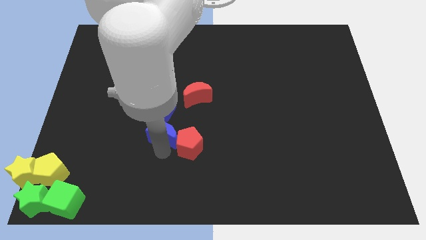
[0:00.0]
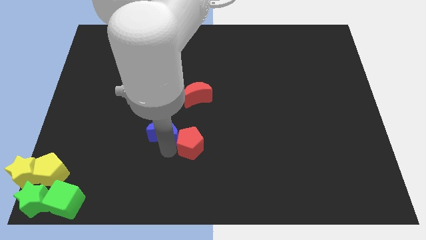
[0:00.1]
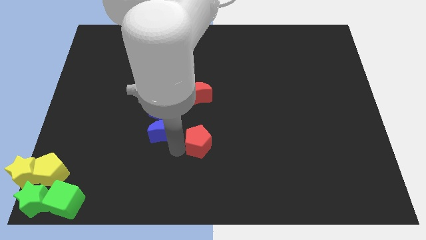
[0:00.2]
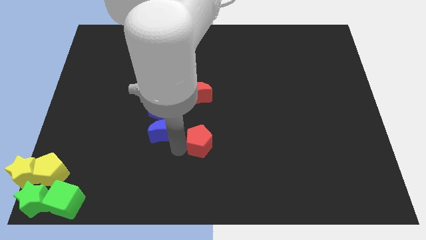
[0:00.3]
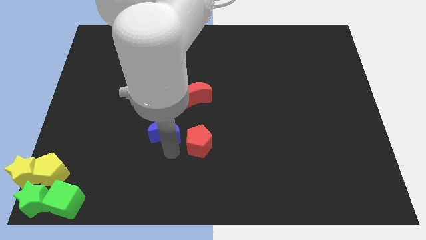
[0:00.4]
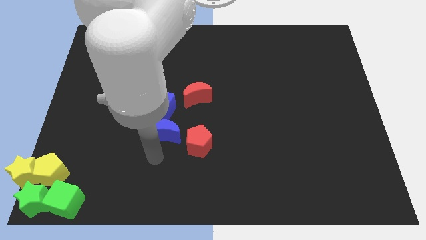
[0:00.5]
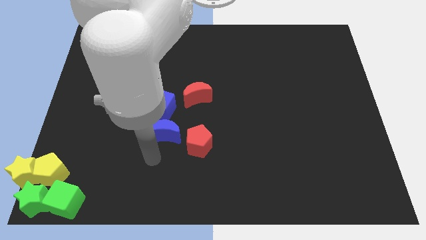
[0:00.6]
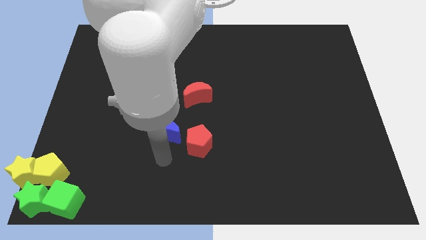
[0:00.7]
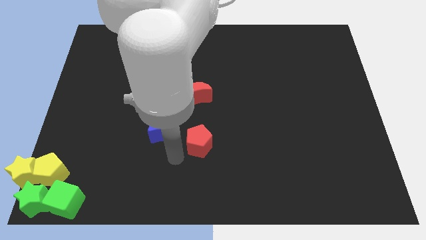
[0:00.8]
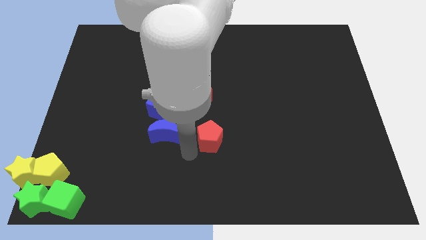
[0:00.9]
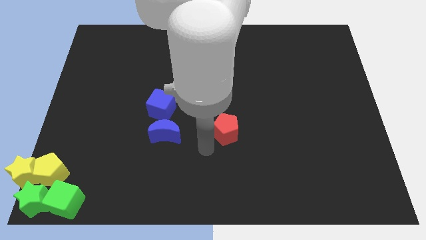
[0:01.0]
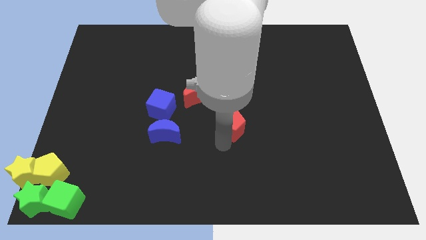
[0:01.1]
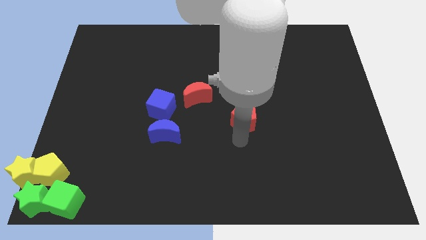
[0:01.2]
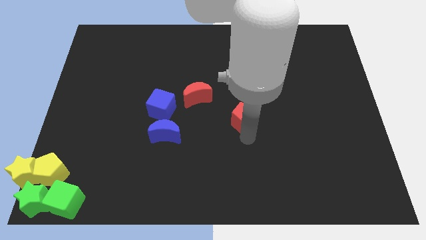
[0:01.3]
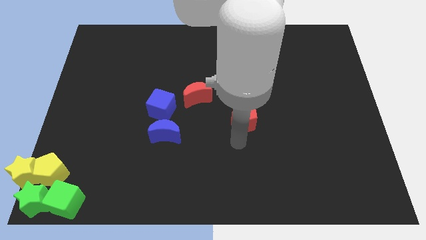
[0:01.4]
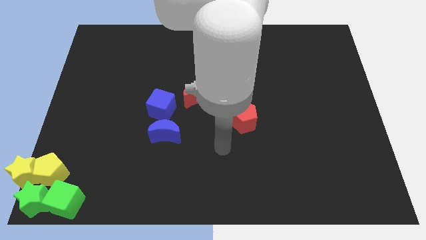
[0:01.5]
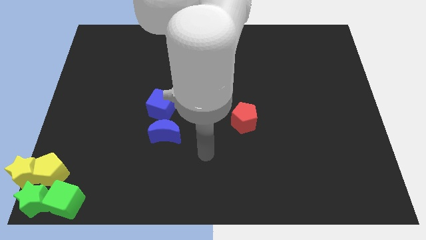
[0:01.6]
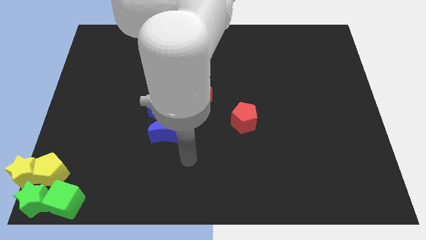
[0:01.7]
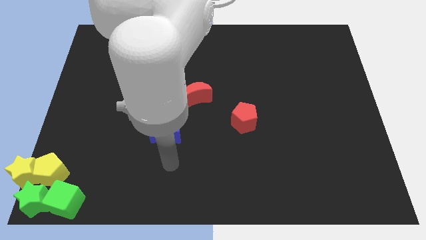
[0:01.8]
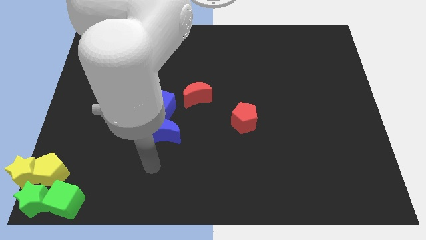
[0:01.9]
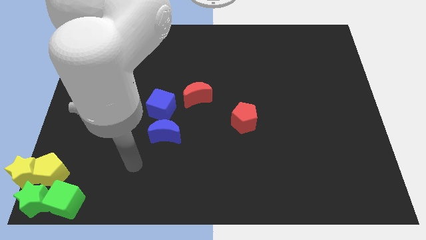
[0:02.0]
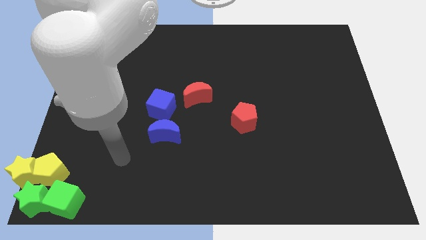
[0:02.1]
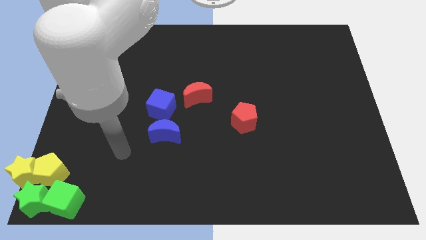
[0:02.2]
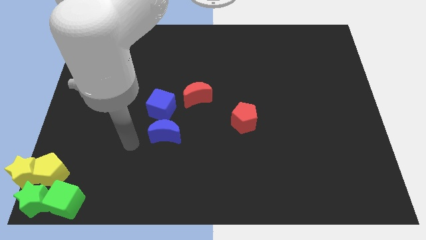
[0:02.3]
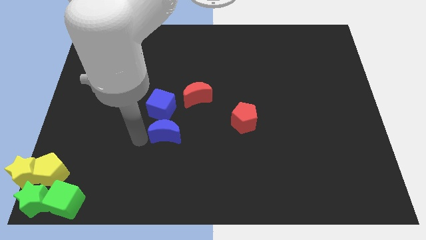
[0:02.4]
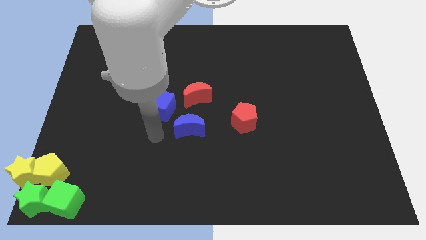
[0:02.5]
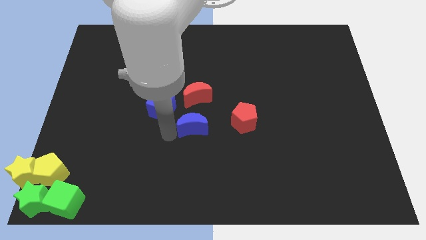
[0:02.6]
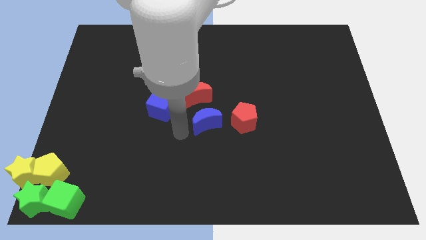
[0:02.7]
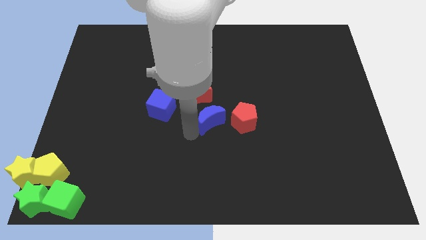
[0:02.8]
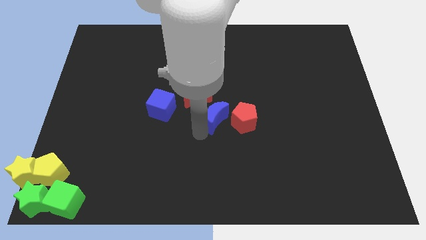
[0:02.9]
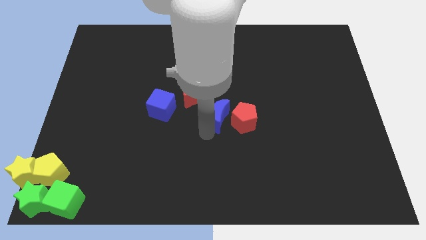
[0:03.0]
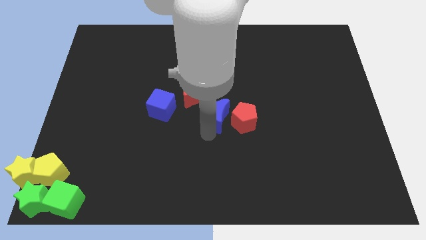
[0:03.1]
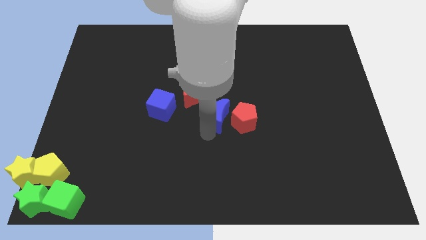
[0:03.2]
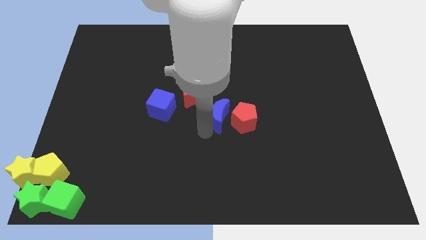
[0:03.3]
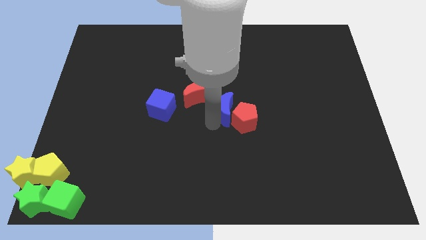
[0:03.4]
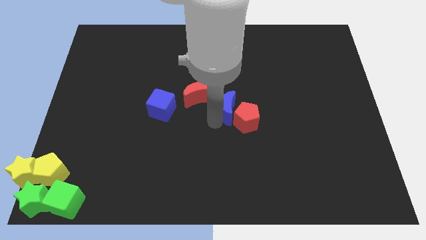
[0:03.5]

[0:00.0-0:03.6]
move the red pentagon and blue moon diagonal below red moon

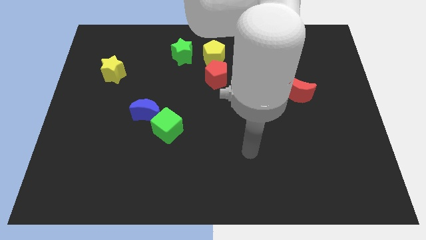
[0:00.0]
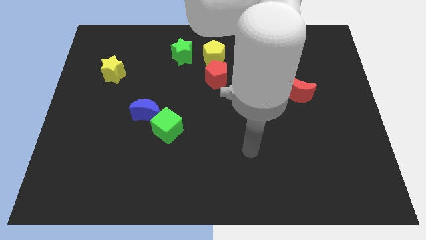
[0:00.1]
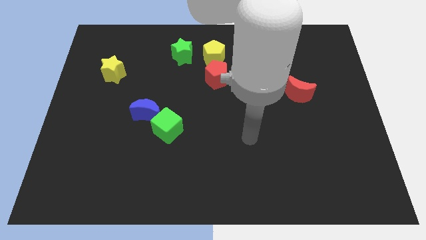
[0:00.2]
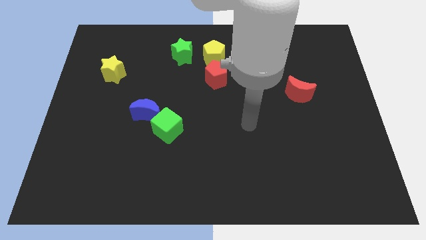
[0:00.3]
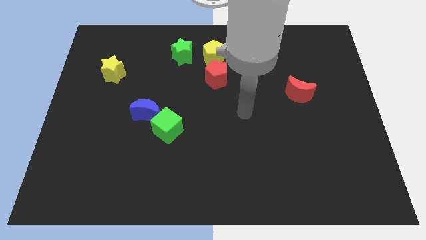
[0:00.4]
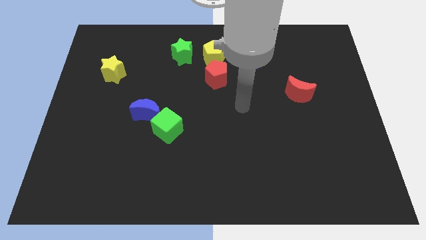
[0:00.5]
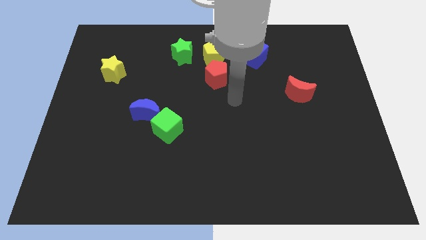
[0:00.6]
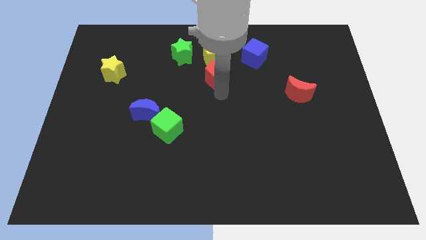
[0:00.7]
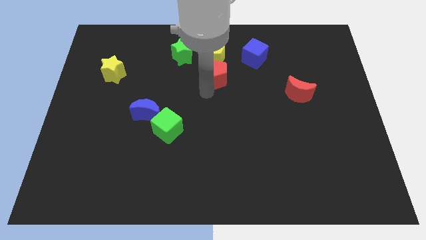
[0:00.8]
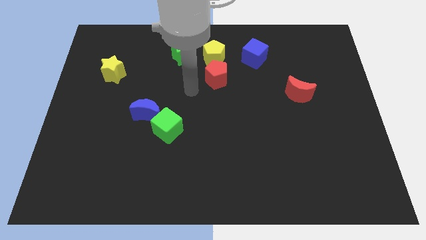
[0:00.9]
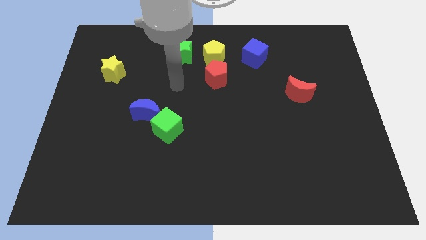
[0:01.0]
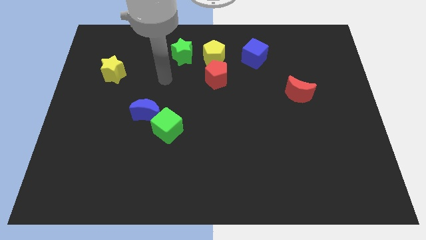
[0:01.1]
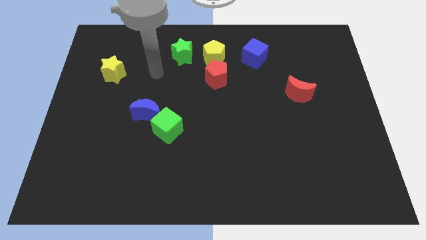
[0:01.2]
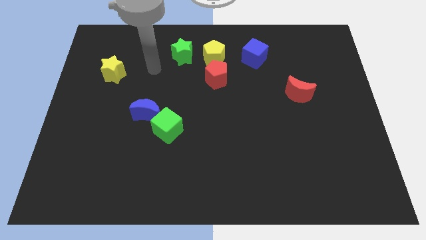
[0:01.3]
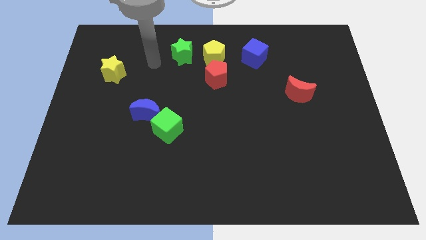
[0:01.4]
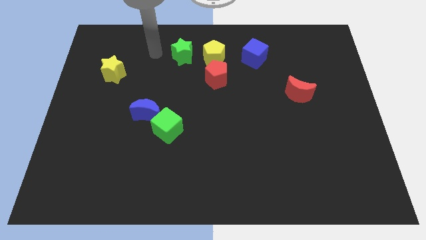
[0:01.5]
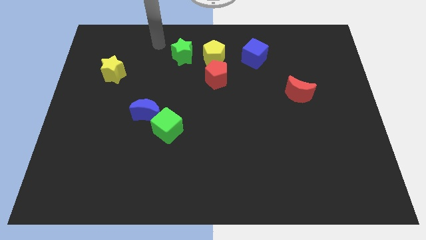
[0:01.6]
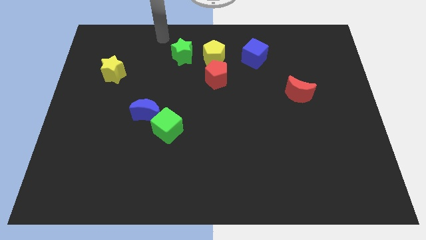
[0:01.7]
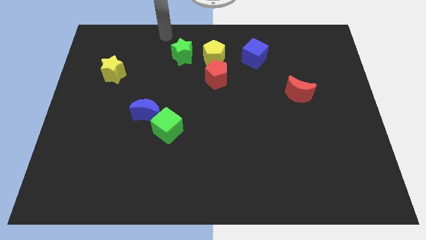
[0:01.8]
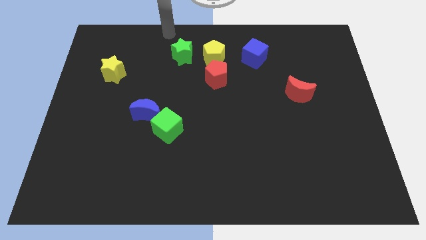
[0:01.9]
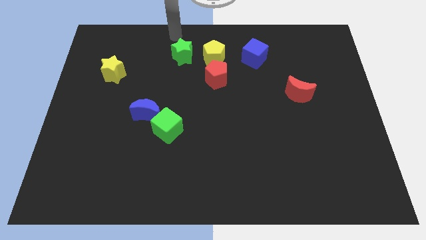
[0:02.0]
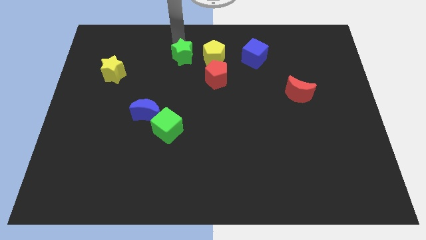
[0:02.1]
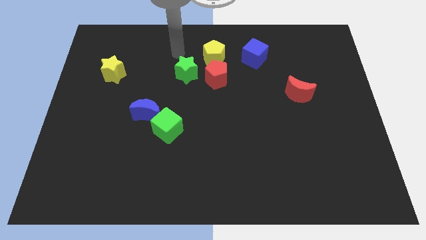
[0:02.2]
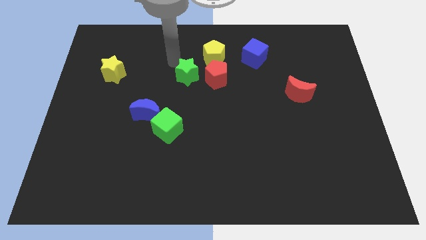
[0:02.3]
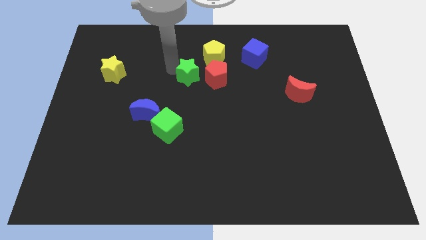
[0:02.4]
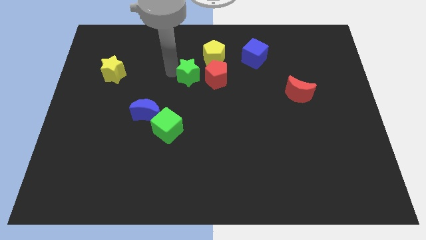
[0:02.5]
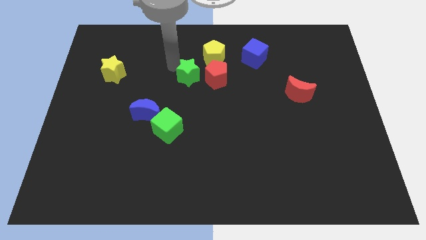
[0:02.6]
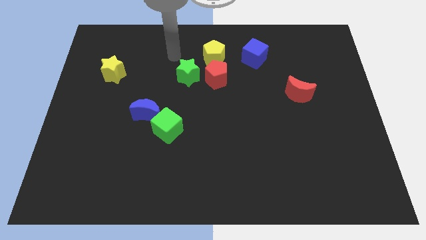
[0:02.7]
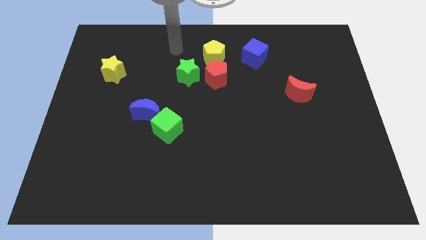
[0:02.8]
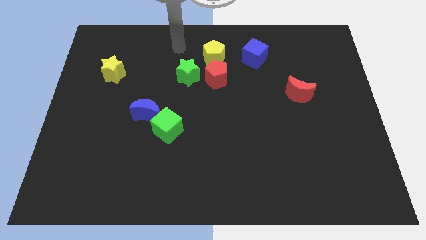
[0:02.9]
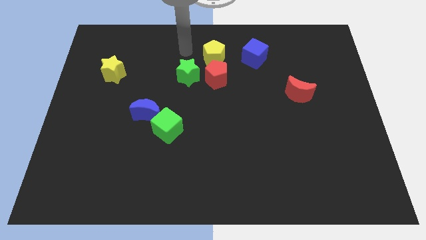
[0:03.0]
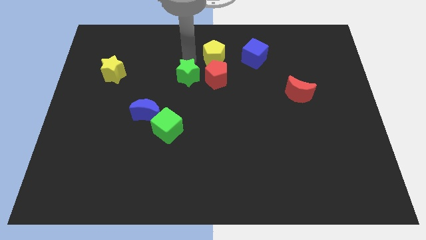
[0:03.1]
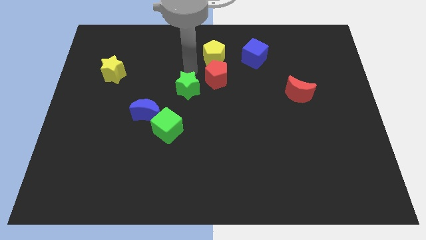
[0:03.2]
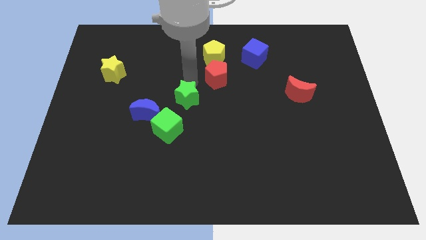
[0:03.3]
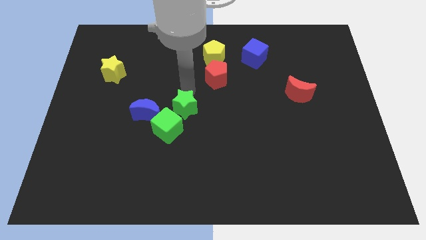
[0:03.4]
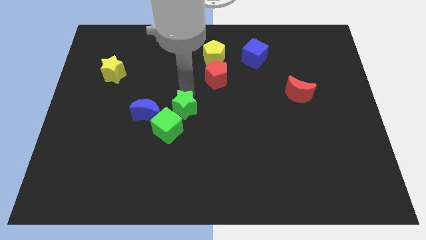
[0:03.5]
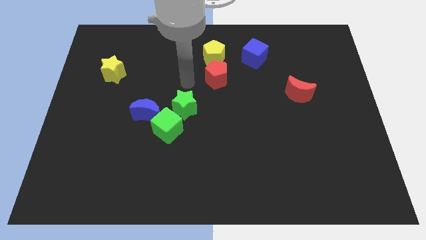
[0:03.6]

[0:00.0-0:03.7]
place the green star above the green cube

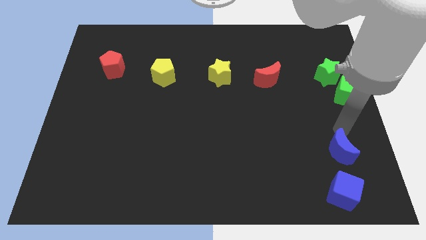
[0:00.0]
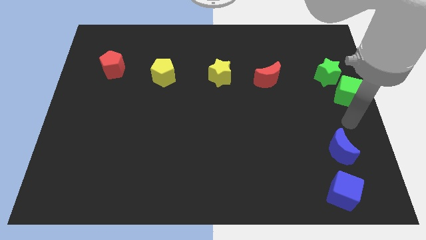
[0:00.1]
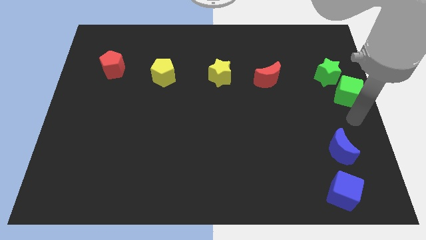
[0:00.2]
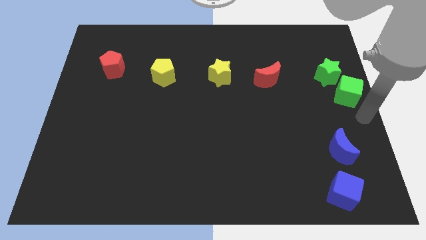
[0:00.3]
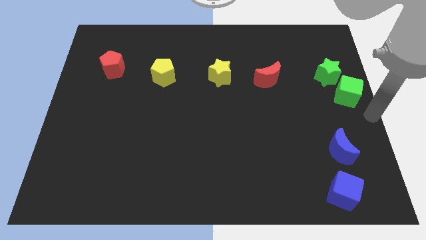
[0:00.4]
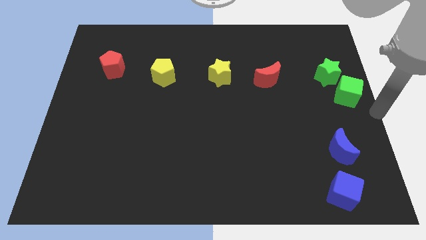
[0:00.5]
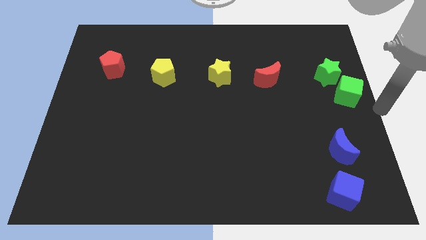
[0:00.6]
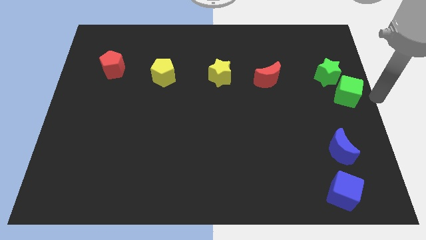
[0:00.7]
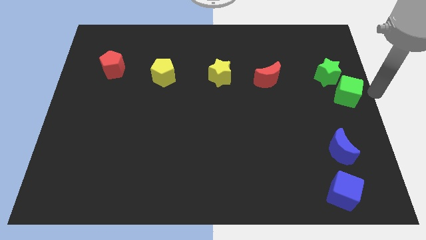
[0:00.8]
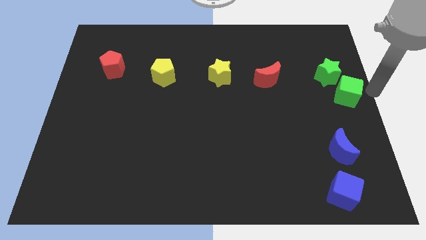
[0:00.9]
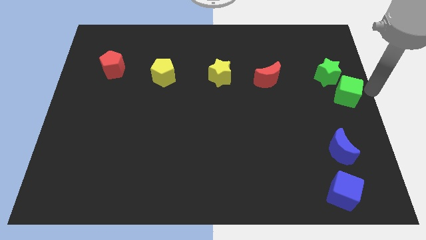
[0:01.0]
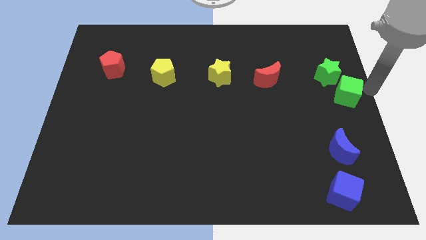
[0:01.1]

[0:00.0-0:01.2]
move your hand to the right of the green cube

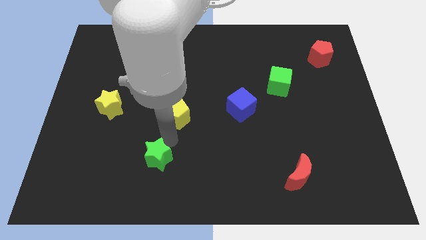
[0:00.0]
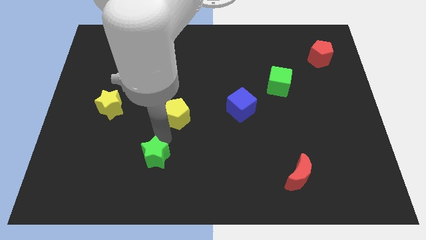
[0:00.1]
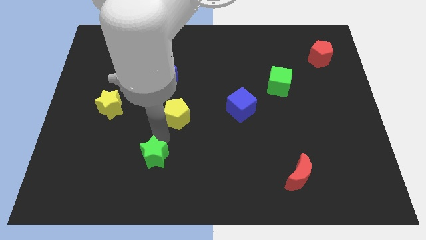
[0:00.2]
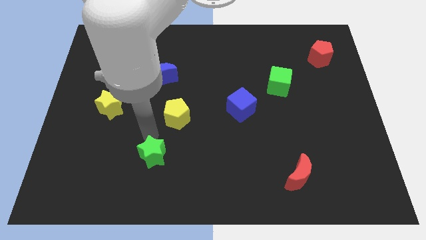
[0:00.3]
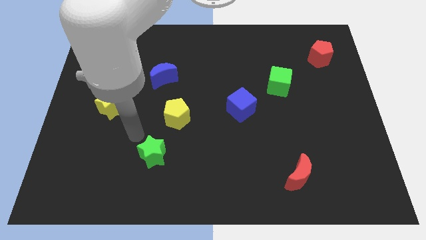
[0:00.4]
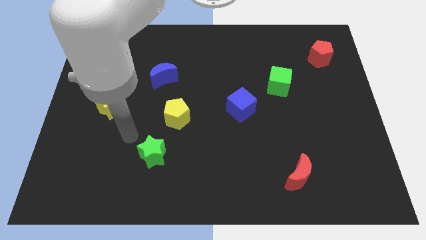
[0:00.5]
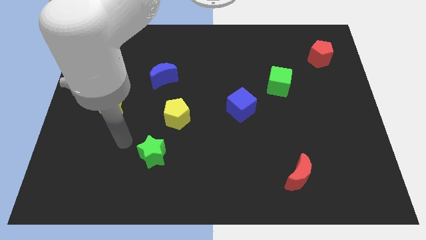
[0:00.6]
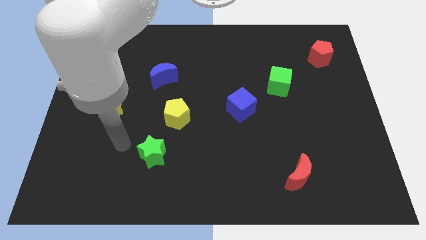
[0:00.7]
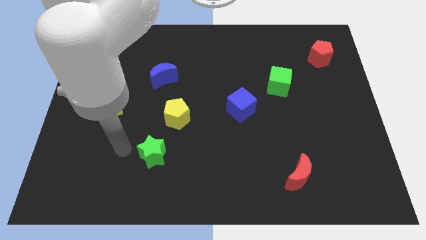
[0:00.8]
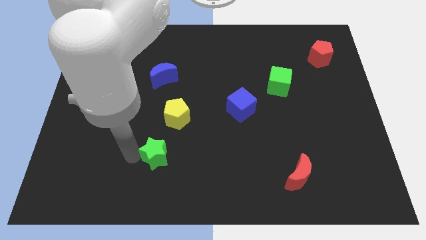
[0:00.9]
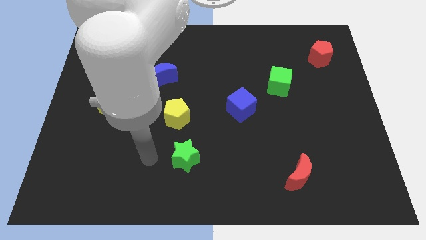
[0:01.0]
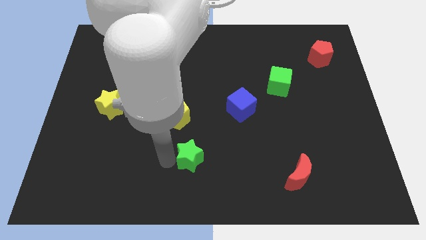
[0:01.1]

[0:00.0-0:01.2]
move the green star diagonally on the bottom right side of the yellow pentagon
